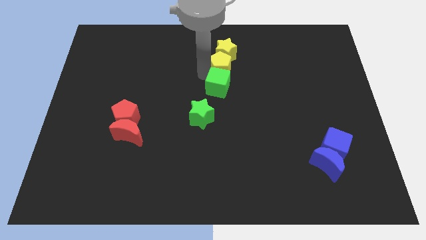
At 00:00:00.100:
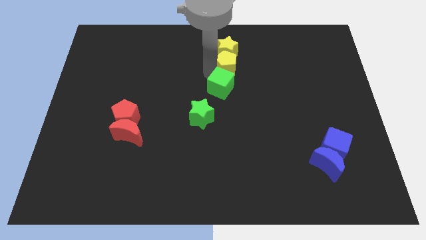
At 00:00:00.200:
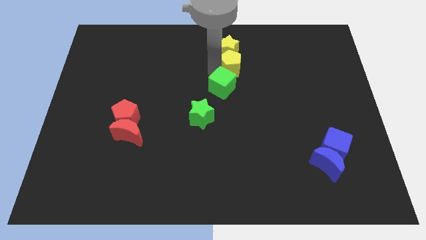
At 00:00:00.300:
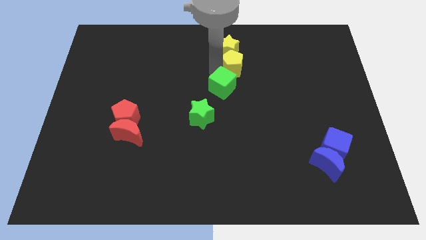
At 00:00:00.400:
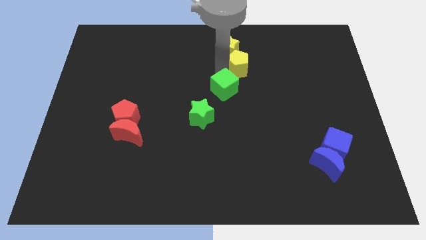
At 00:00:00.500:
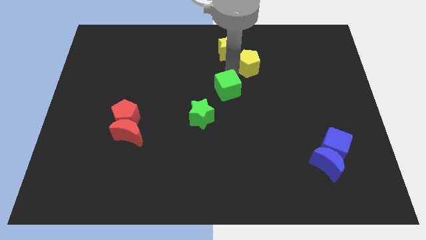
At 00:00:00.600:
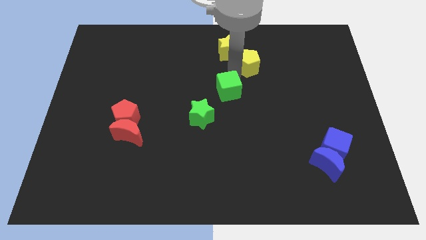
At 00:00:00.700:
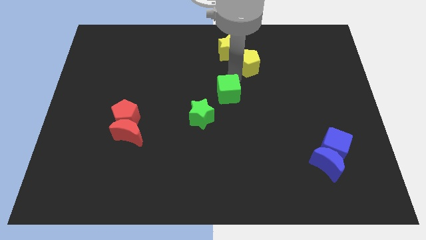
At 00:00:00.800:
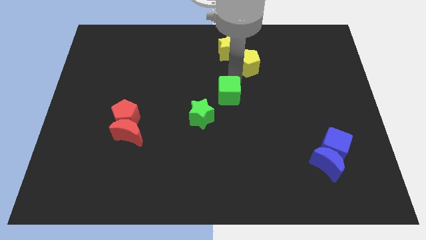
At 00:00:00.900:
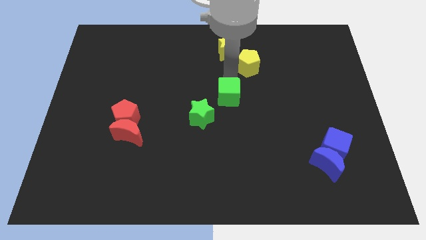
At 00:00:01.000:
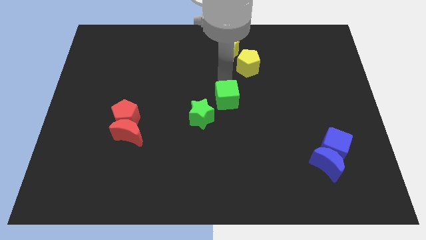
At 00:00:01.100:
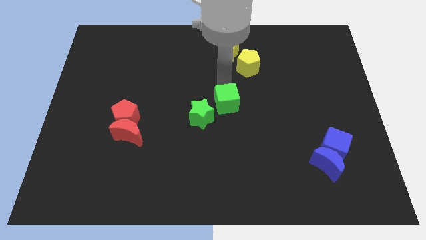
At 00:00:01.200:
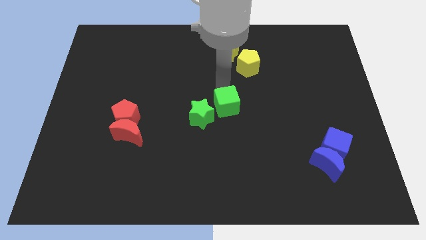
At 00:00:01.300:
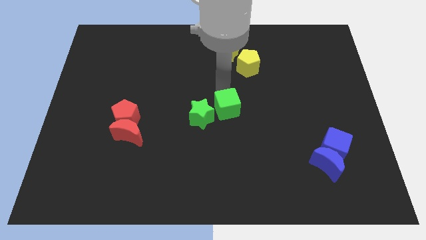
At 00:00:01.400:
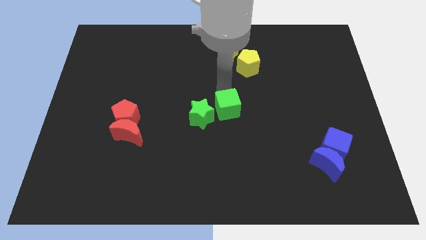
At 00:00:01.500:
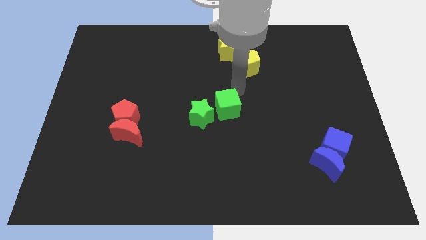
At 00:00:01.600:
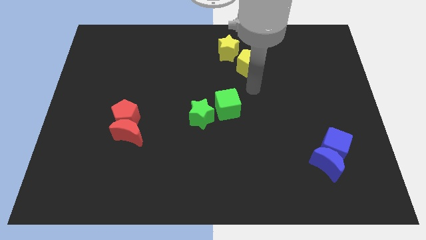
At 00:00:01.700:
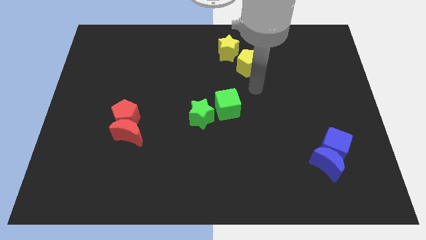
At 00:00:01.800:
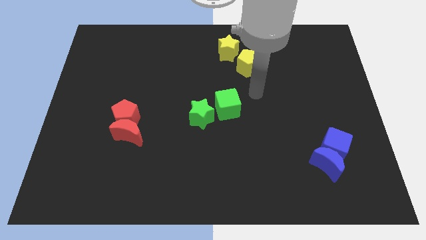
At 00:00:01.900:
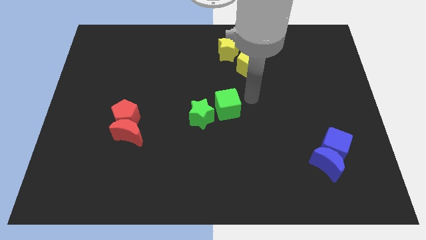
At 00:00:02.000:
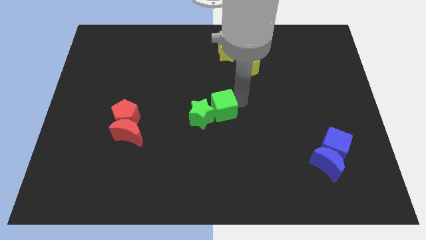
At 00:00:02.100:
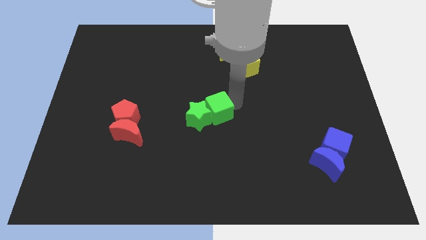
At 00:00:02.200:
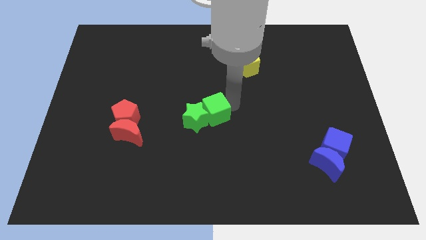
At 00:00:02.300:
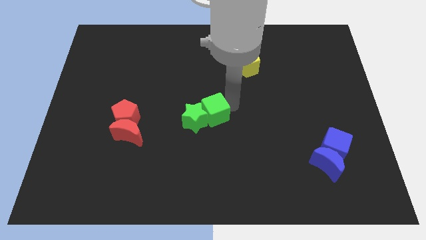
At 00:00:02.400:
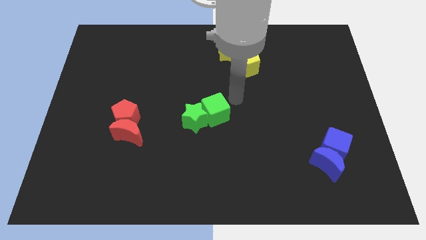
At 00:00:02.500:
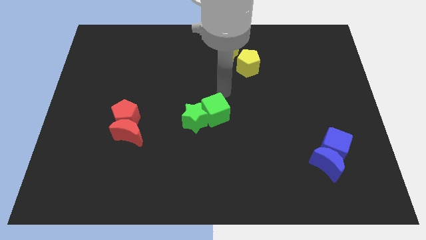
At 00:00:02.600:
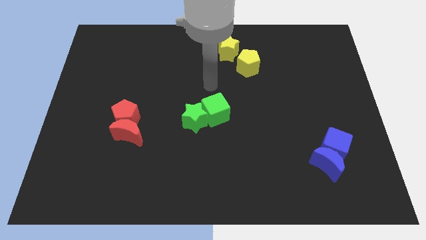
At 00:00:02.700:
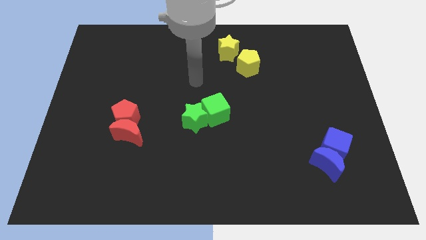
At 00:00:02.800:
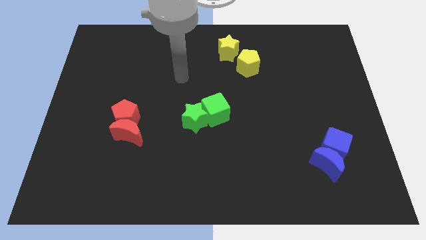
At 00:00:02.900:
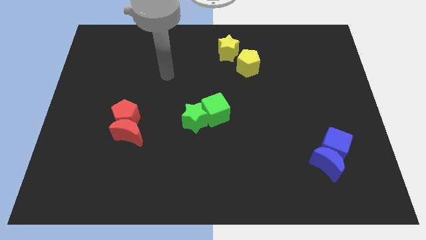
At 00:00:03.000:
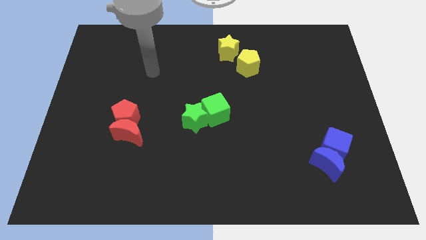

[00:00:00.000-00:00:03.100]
push the green blocks towards the bottom side of the board

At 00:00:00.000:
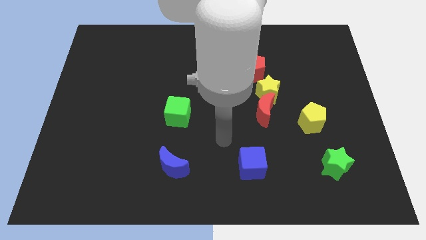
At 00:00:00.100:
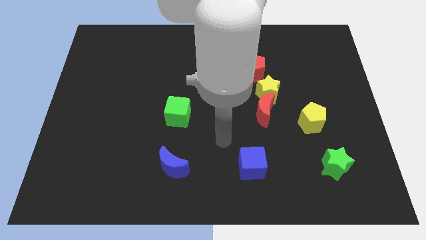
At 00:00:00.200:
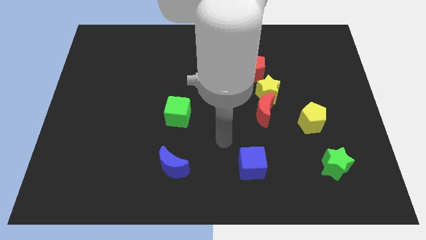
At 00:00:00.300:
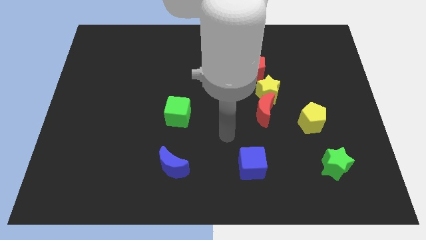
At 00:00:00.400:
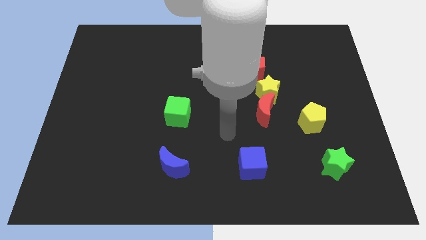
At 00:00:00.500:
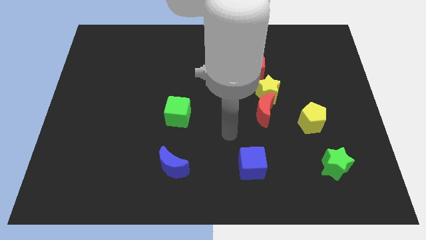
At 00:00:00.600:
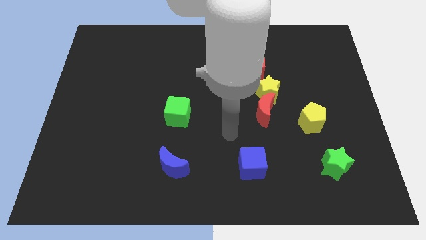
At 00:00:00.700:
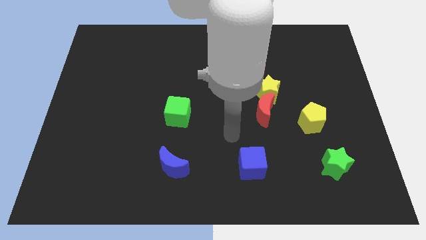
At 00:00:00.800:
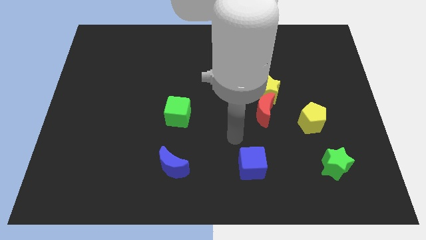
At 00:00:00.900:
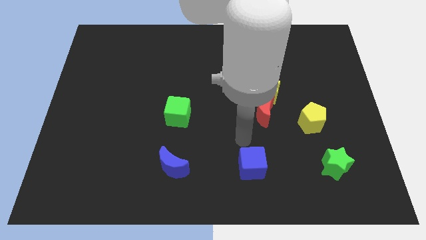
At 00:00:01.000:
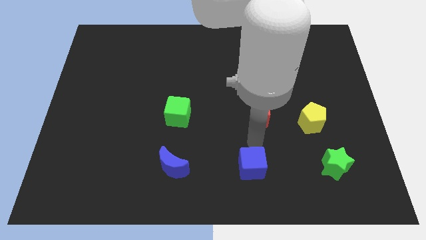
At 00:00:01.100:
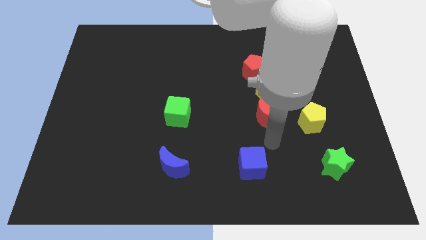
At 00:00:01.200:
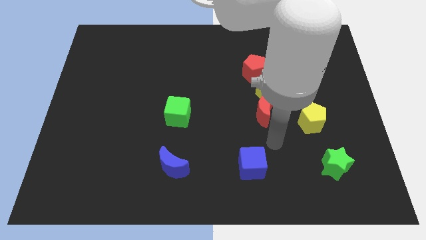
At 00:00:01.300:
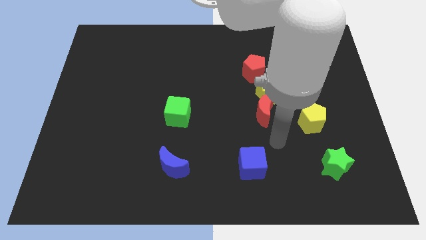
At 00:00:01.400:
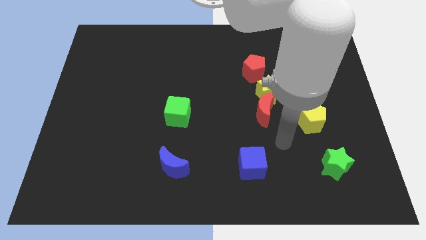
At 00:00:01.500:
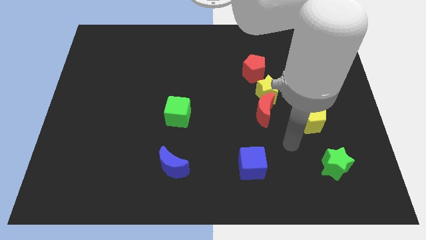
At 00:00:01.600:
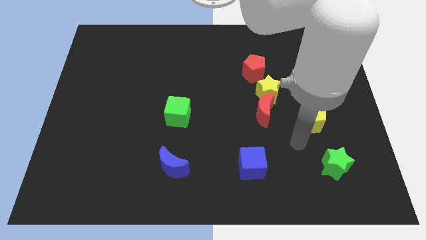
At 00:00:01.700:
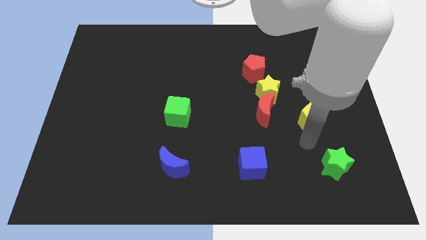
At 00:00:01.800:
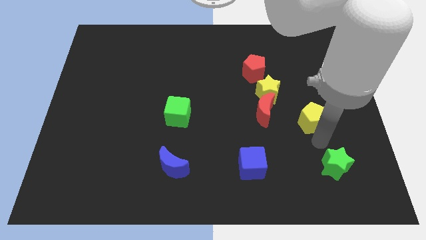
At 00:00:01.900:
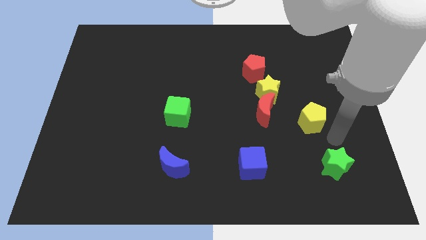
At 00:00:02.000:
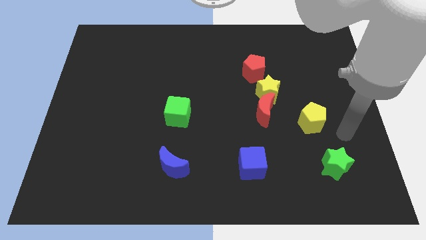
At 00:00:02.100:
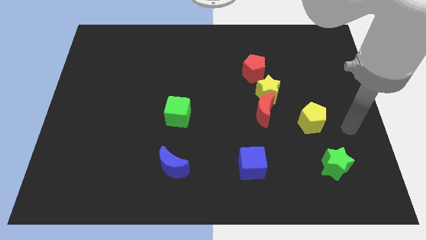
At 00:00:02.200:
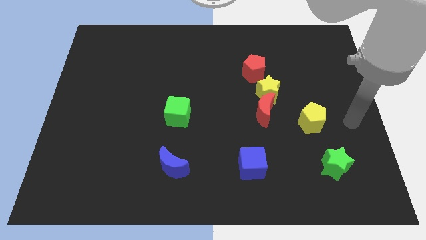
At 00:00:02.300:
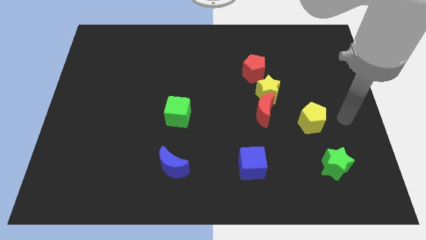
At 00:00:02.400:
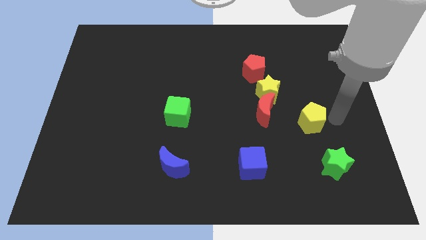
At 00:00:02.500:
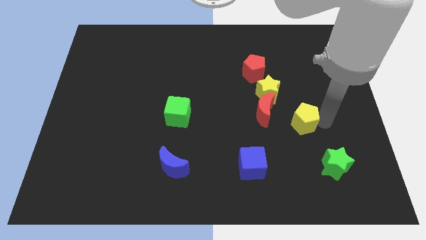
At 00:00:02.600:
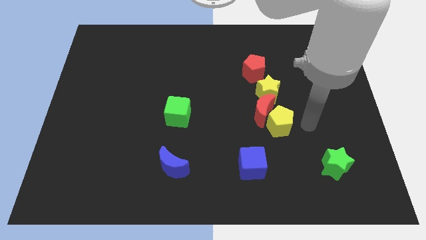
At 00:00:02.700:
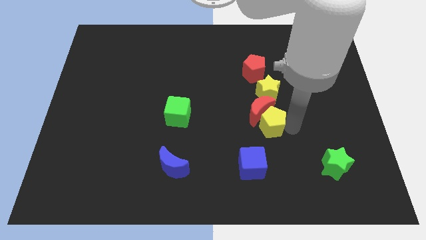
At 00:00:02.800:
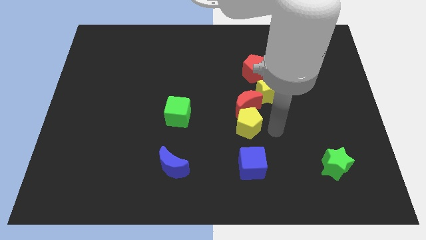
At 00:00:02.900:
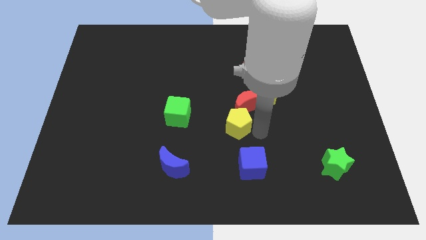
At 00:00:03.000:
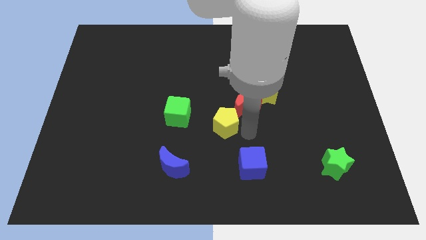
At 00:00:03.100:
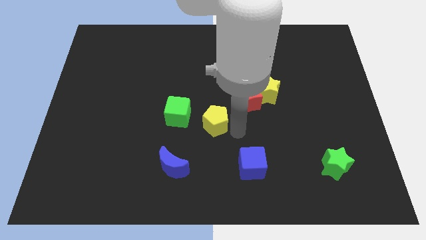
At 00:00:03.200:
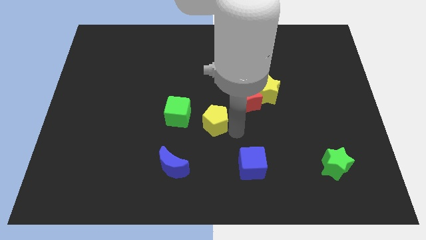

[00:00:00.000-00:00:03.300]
push the red moon and yellow pentagon center of the board

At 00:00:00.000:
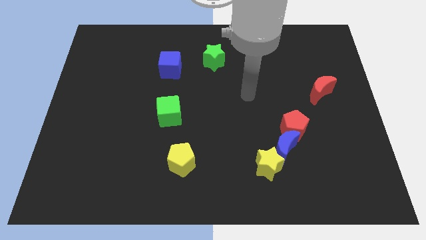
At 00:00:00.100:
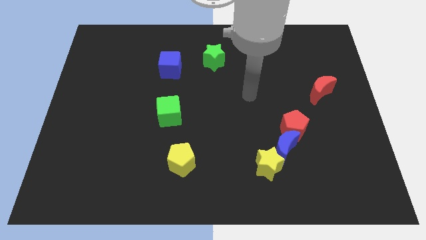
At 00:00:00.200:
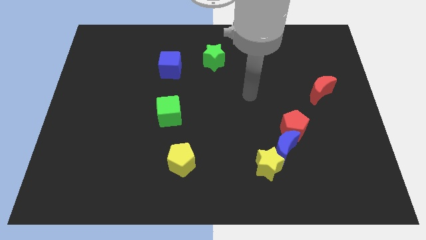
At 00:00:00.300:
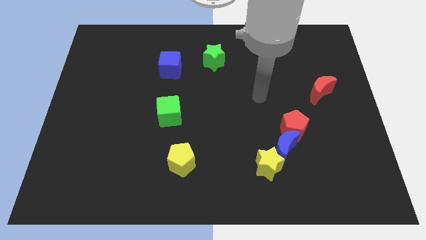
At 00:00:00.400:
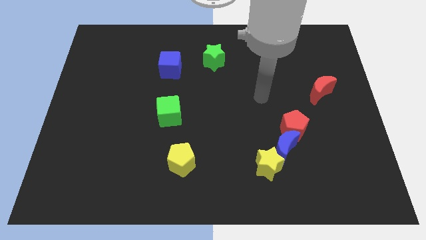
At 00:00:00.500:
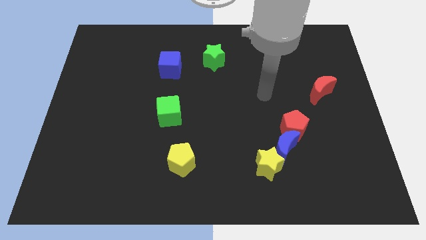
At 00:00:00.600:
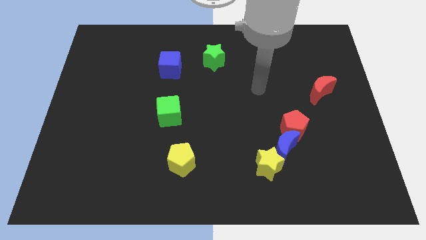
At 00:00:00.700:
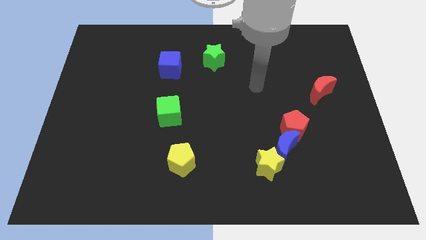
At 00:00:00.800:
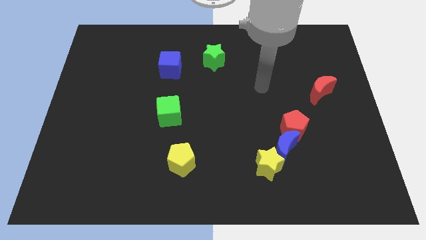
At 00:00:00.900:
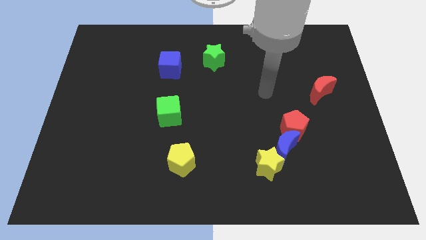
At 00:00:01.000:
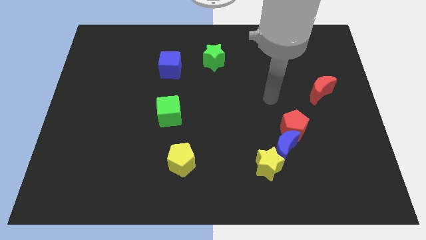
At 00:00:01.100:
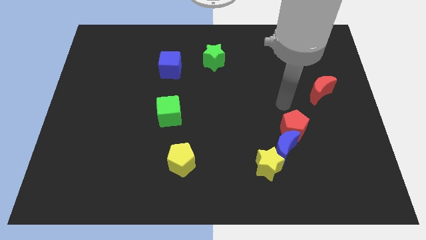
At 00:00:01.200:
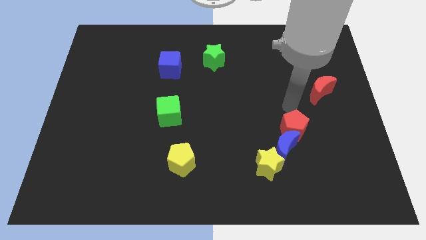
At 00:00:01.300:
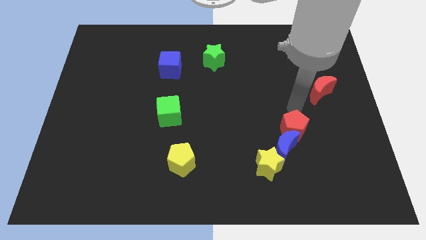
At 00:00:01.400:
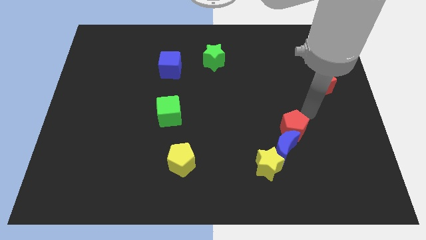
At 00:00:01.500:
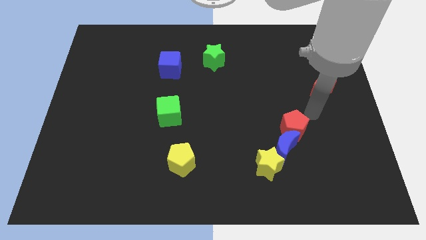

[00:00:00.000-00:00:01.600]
place your arm in between the red pentagon and red moon

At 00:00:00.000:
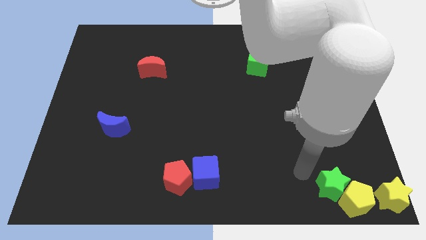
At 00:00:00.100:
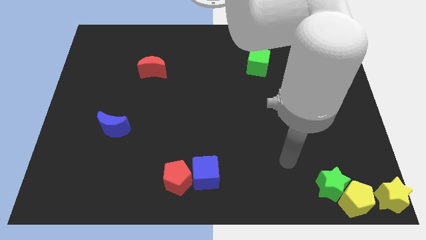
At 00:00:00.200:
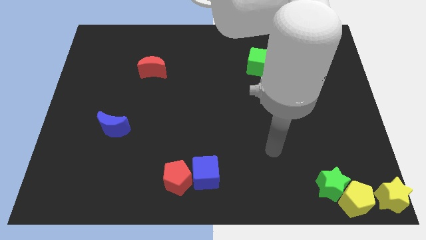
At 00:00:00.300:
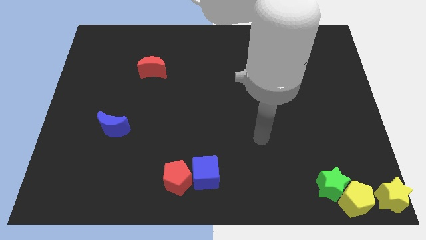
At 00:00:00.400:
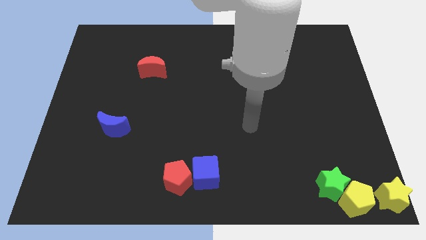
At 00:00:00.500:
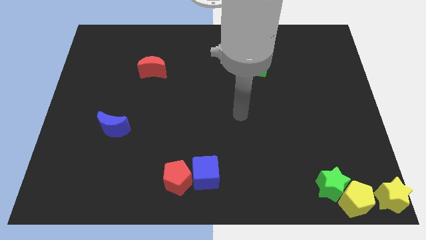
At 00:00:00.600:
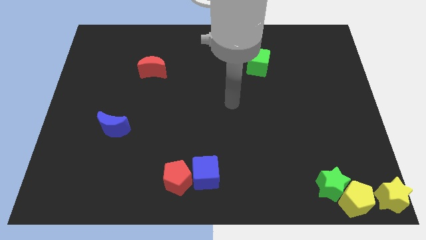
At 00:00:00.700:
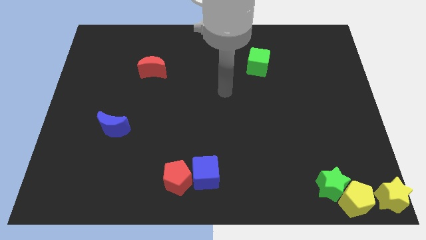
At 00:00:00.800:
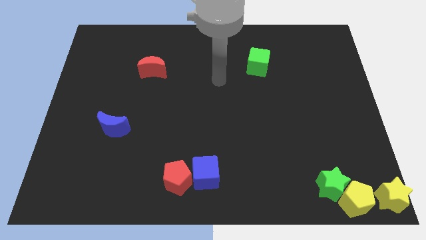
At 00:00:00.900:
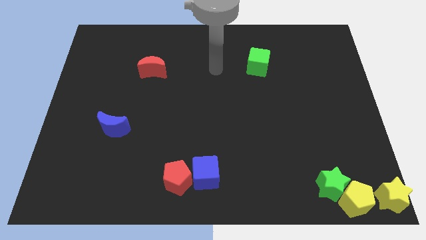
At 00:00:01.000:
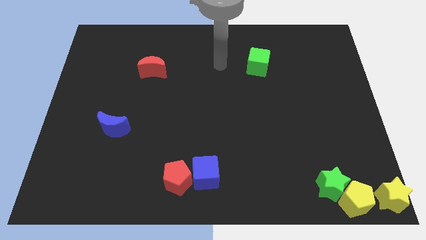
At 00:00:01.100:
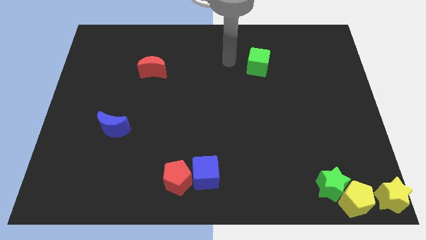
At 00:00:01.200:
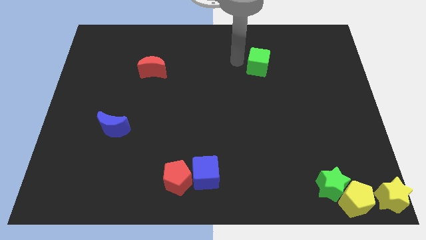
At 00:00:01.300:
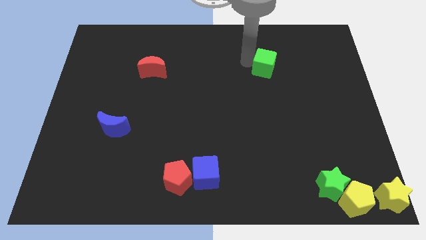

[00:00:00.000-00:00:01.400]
point your arm at the left side of the green cube
